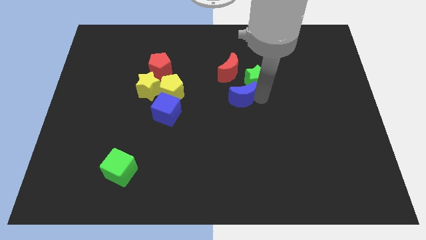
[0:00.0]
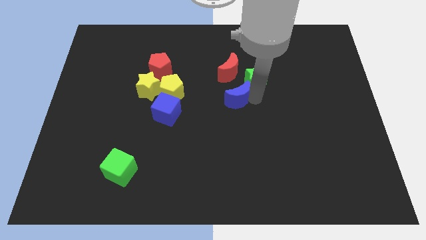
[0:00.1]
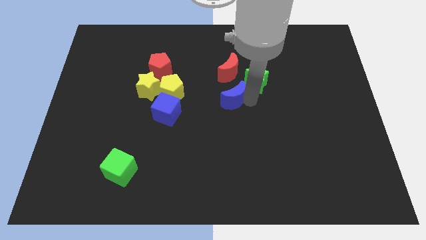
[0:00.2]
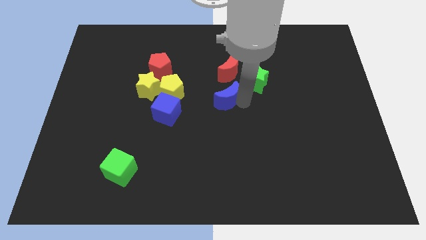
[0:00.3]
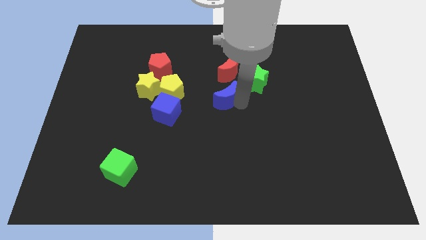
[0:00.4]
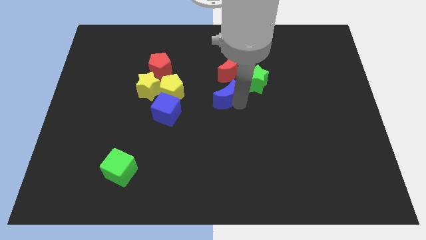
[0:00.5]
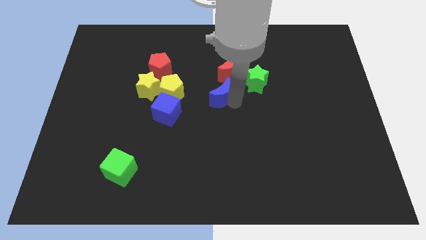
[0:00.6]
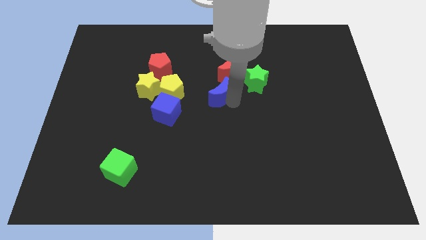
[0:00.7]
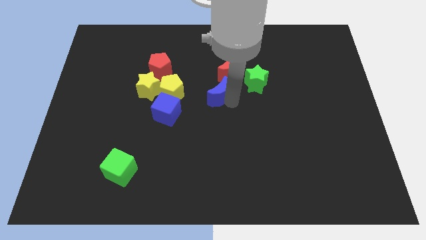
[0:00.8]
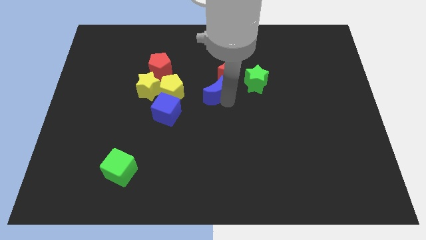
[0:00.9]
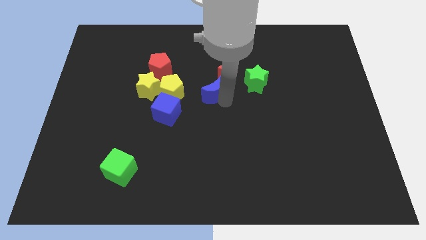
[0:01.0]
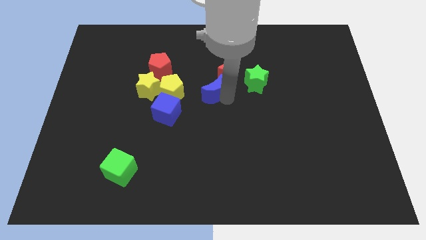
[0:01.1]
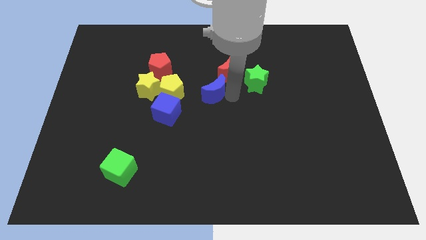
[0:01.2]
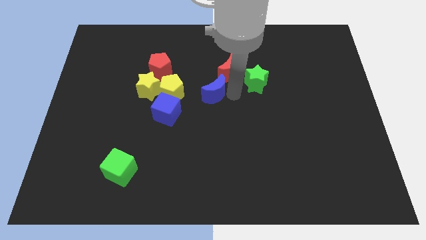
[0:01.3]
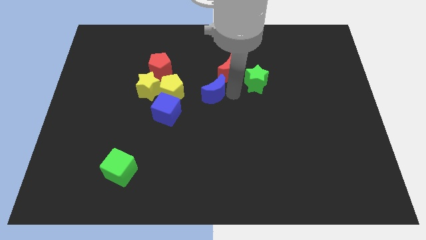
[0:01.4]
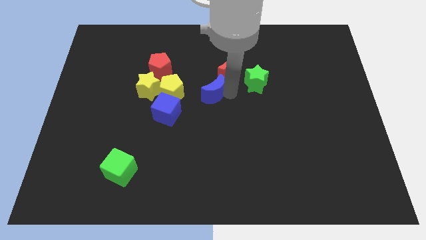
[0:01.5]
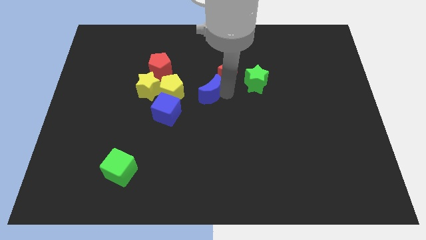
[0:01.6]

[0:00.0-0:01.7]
slide the blue crescent to the bottom left side of the red crescent

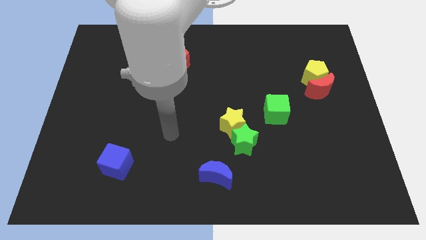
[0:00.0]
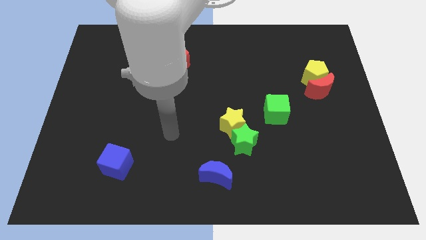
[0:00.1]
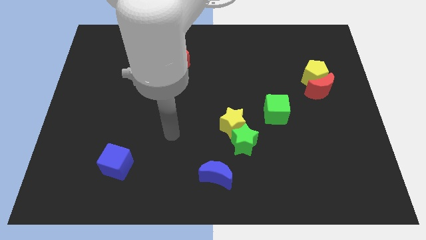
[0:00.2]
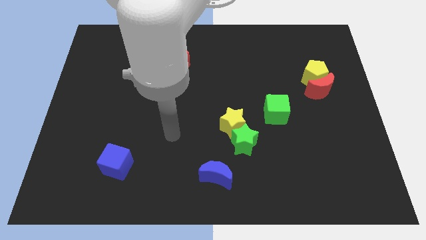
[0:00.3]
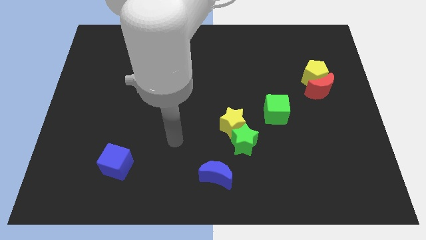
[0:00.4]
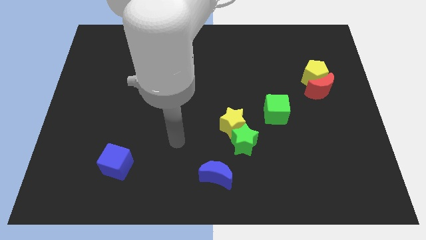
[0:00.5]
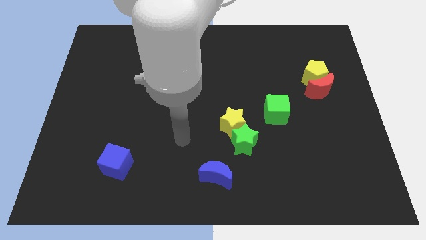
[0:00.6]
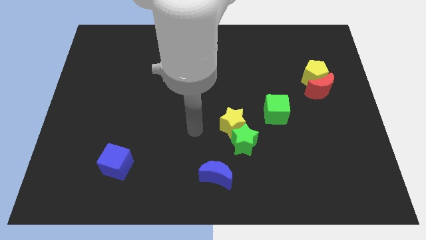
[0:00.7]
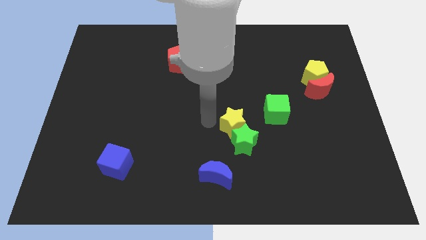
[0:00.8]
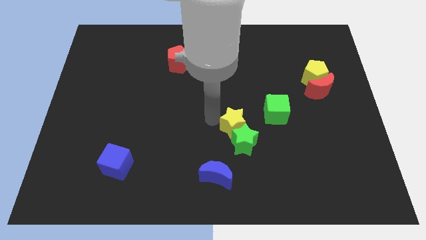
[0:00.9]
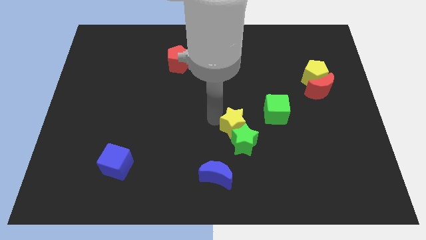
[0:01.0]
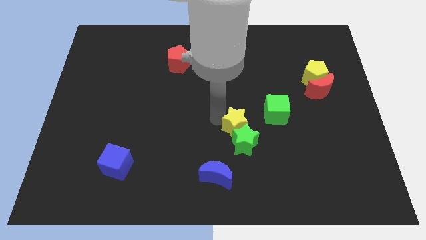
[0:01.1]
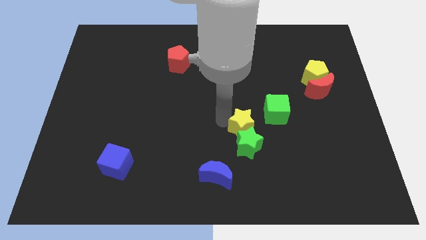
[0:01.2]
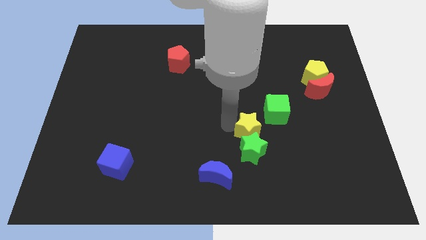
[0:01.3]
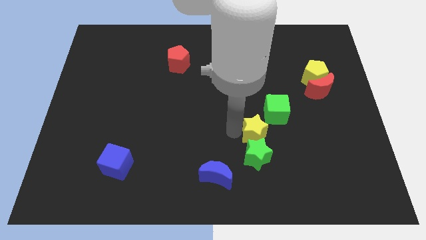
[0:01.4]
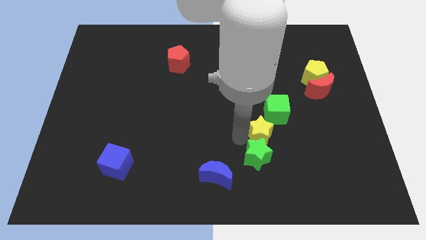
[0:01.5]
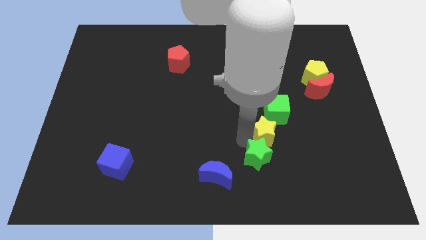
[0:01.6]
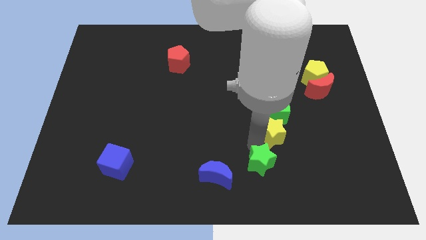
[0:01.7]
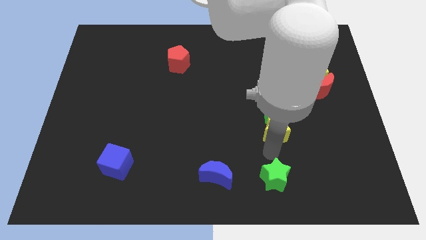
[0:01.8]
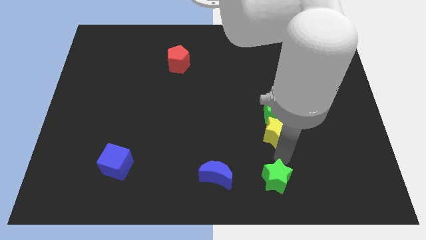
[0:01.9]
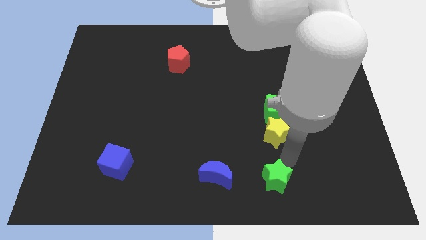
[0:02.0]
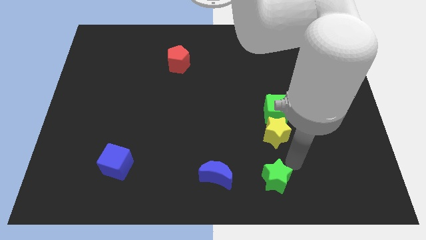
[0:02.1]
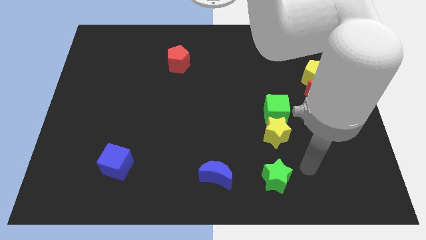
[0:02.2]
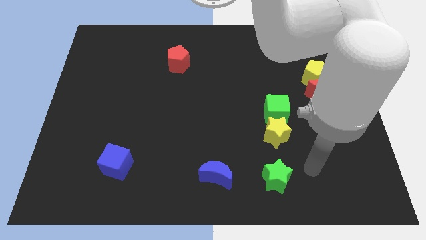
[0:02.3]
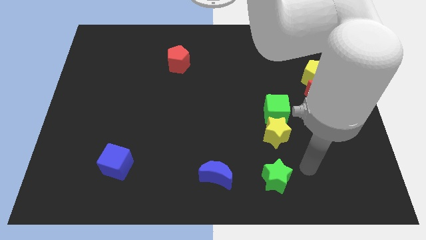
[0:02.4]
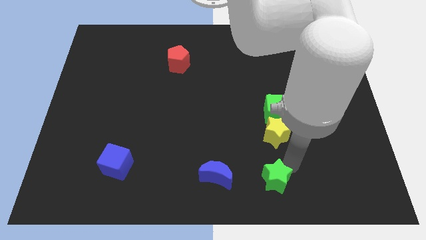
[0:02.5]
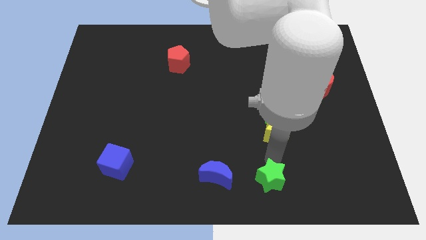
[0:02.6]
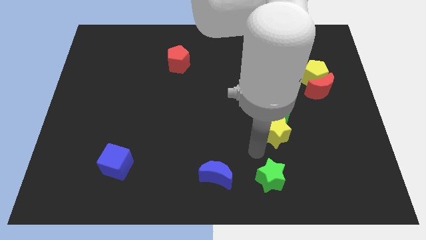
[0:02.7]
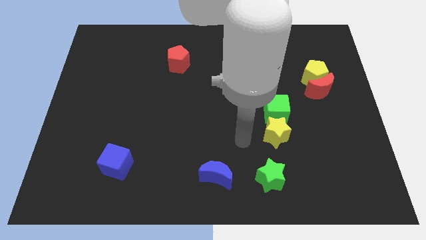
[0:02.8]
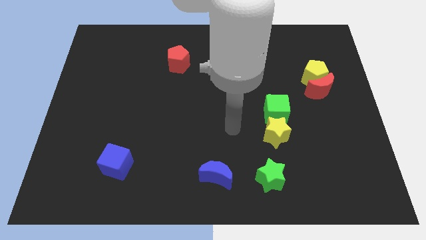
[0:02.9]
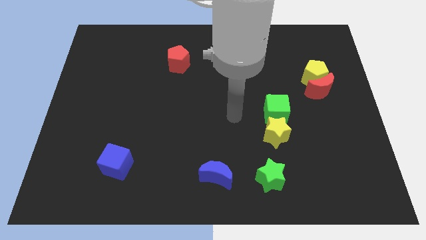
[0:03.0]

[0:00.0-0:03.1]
separate the yellow star and green star each others

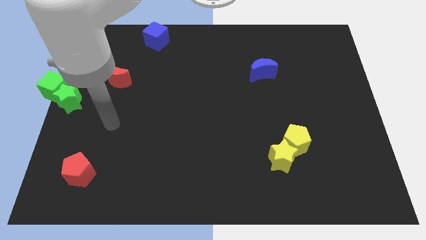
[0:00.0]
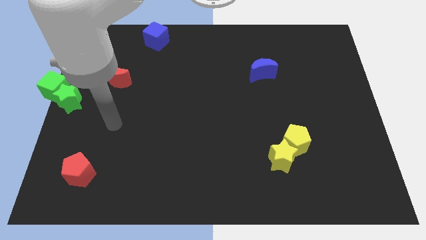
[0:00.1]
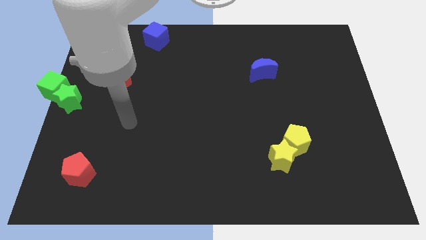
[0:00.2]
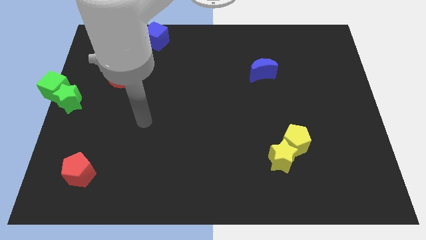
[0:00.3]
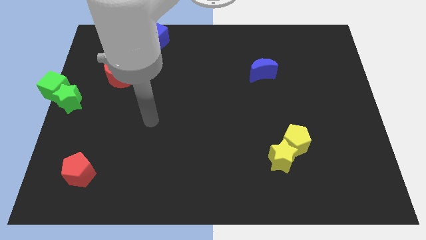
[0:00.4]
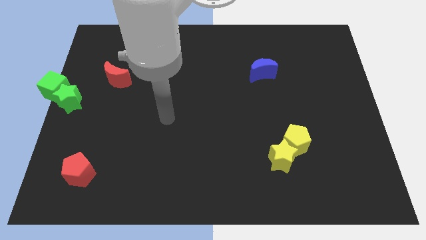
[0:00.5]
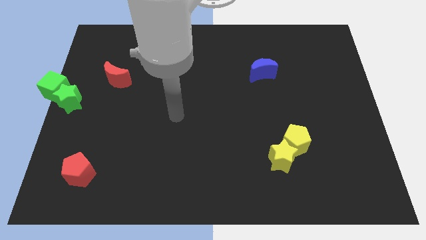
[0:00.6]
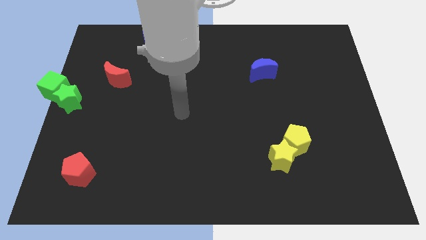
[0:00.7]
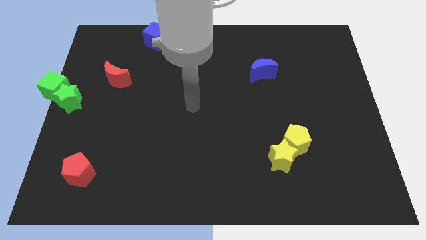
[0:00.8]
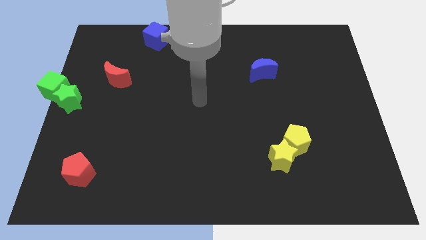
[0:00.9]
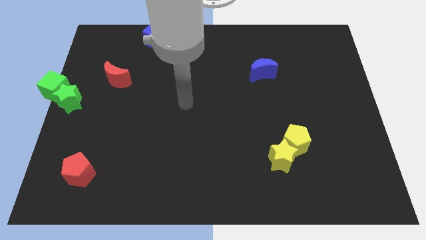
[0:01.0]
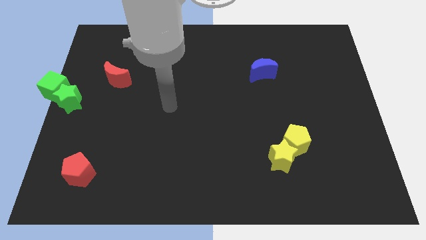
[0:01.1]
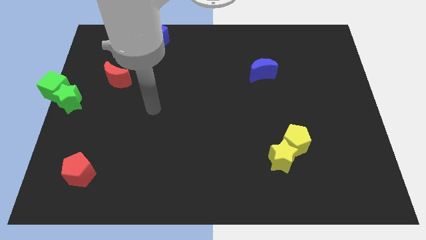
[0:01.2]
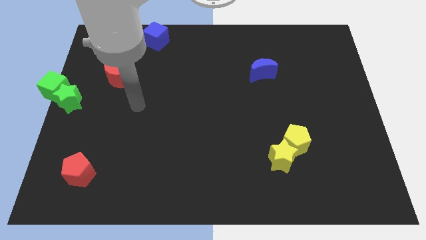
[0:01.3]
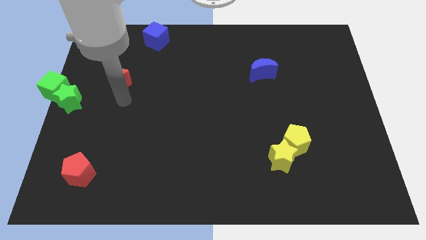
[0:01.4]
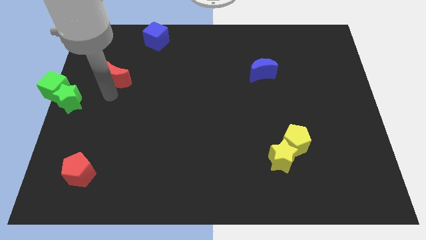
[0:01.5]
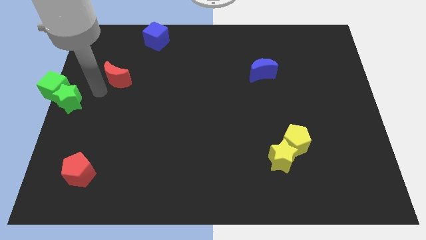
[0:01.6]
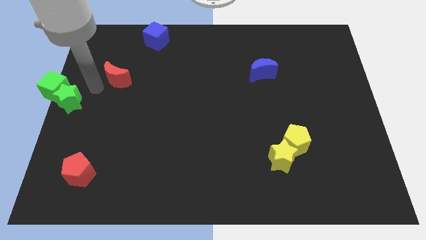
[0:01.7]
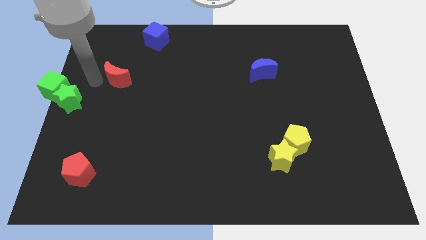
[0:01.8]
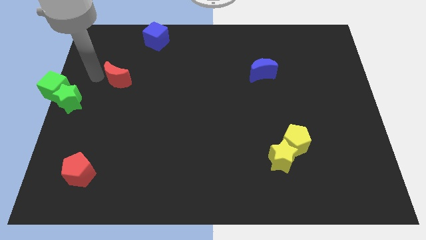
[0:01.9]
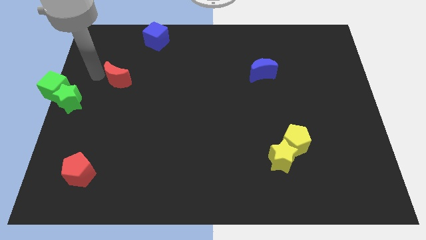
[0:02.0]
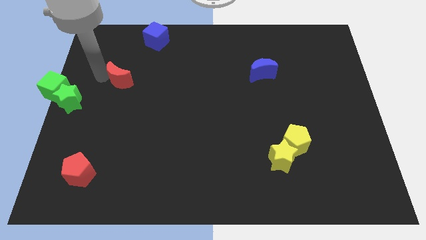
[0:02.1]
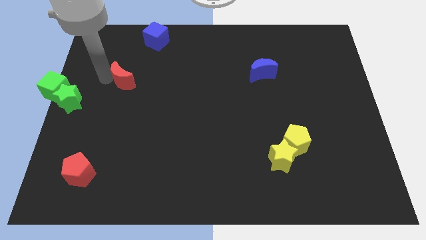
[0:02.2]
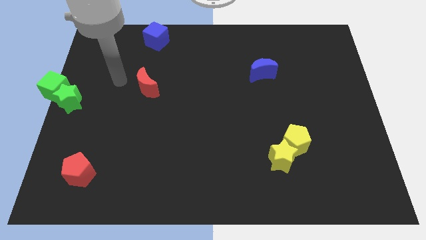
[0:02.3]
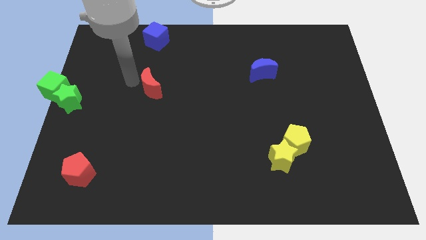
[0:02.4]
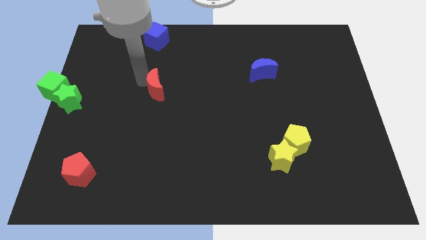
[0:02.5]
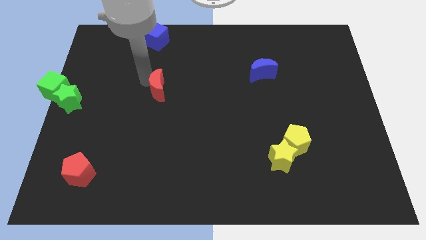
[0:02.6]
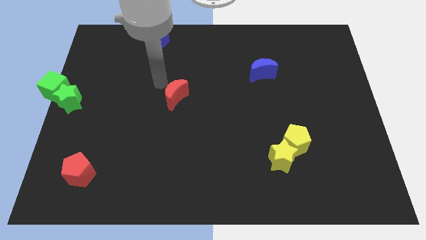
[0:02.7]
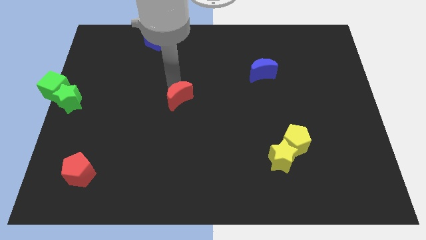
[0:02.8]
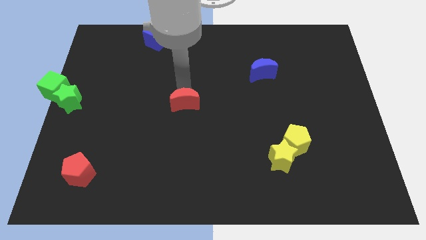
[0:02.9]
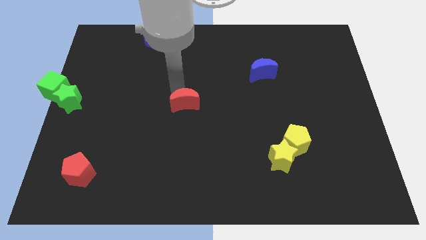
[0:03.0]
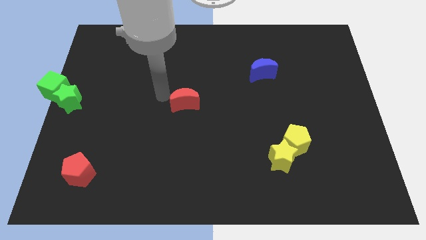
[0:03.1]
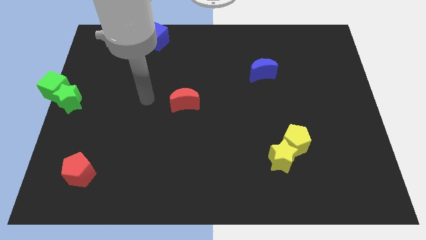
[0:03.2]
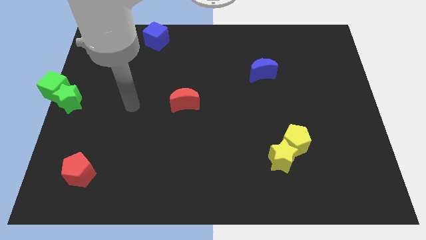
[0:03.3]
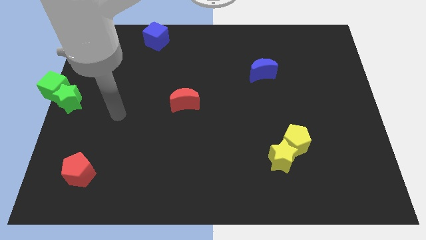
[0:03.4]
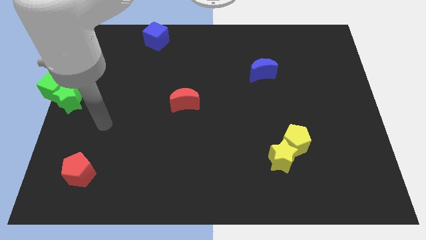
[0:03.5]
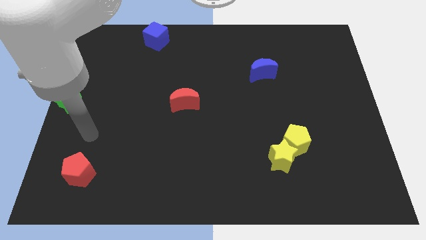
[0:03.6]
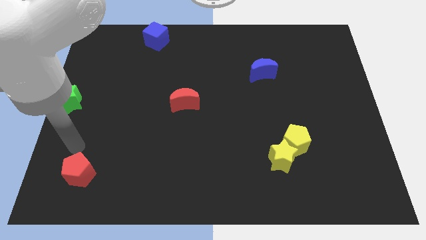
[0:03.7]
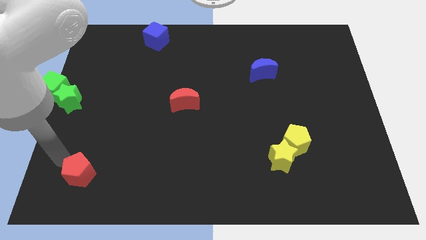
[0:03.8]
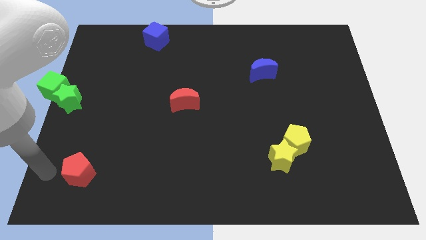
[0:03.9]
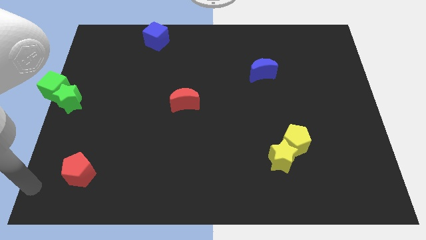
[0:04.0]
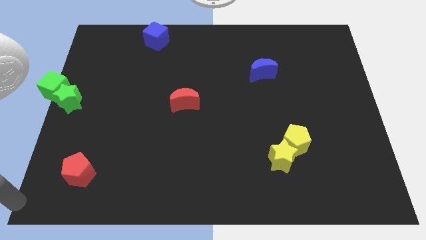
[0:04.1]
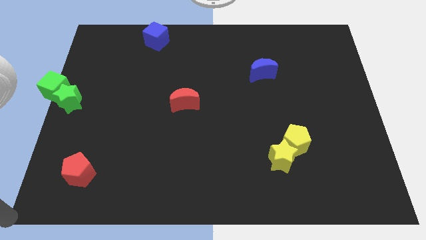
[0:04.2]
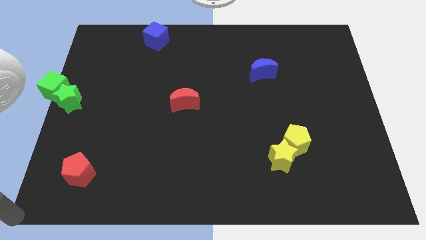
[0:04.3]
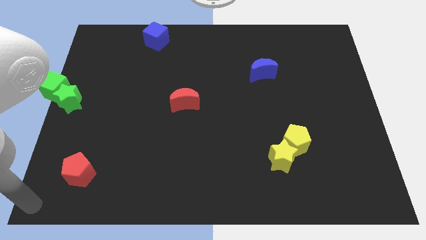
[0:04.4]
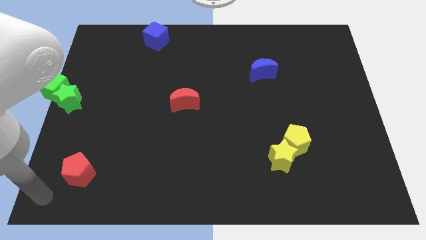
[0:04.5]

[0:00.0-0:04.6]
place red moon at the center of the board
